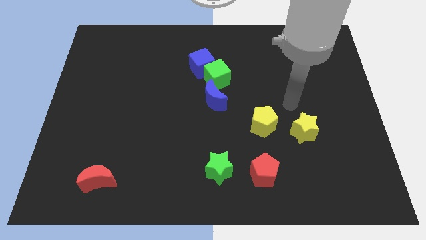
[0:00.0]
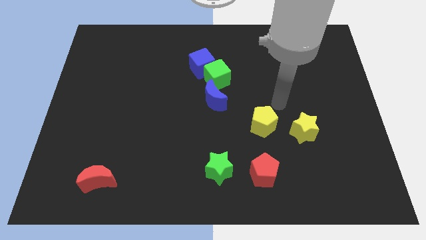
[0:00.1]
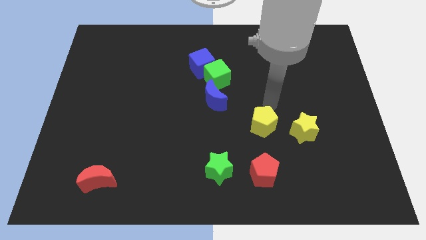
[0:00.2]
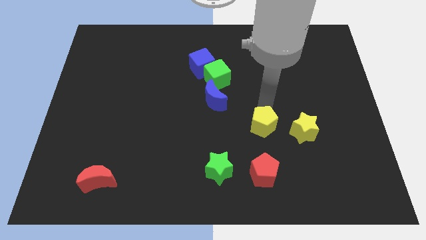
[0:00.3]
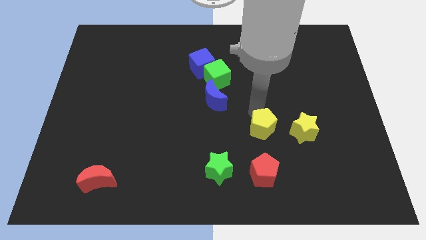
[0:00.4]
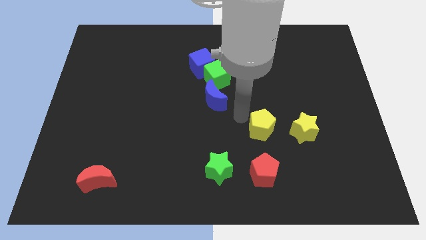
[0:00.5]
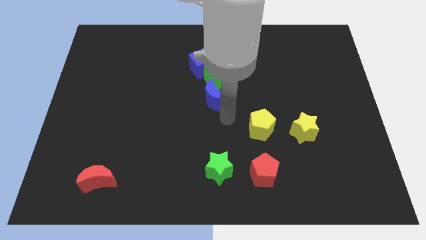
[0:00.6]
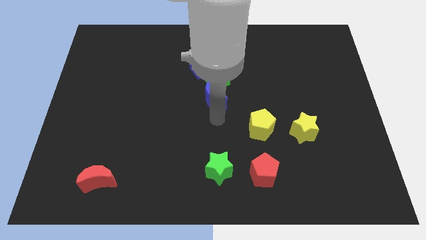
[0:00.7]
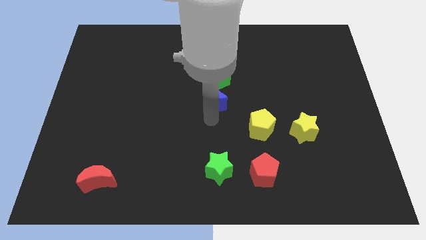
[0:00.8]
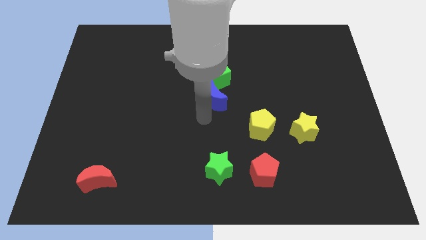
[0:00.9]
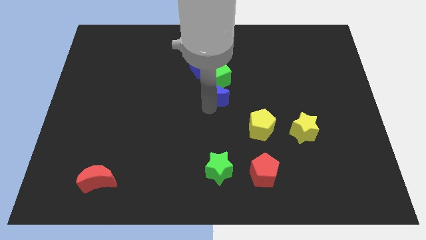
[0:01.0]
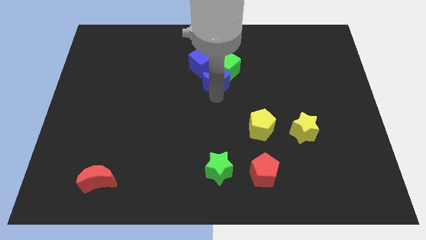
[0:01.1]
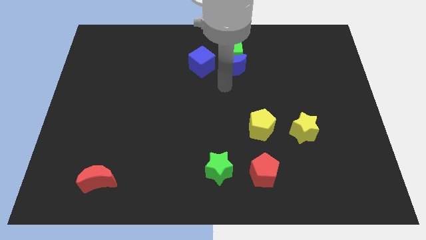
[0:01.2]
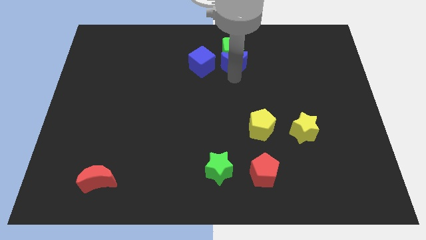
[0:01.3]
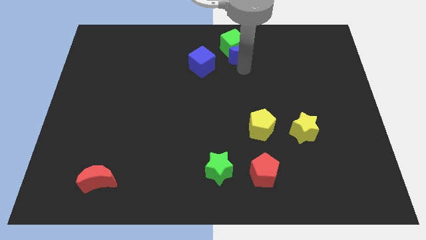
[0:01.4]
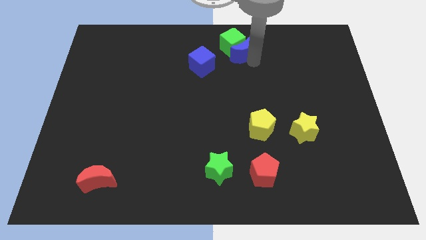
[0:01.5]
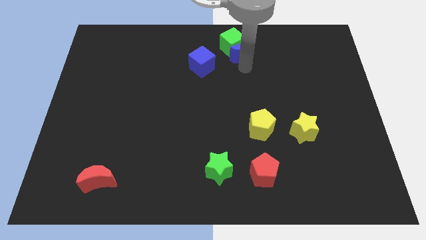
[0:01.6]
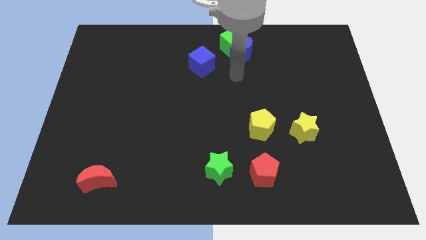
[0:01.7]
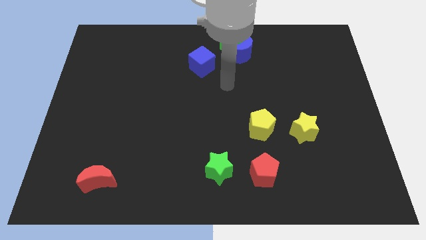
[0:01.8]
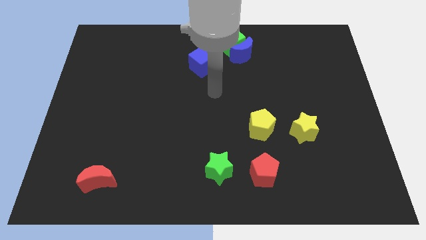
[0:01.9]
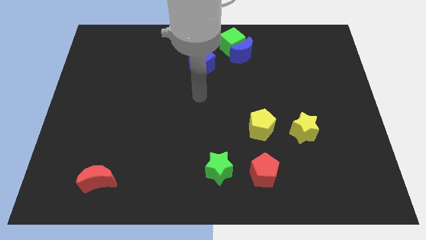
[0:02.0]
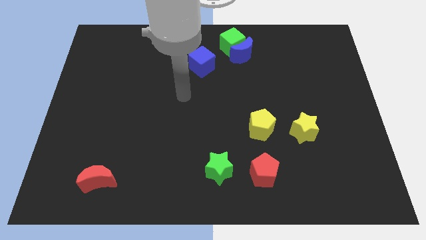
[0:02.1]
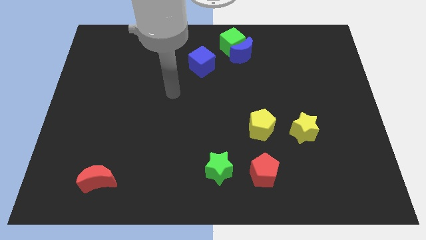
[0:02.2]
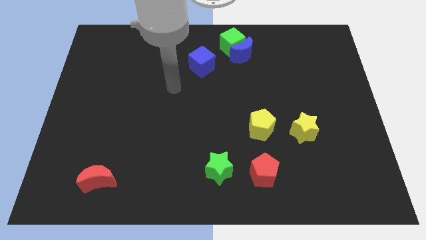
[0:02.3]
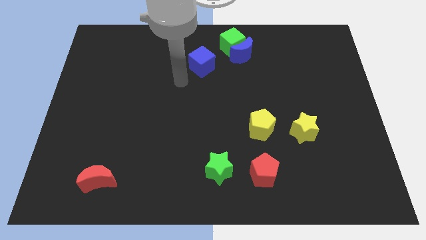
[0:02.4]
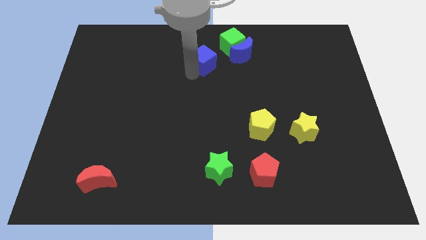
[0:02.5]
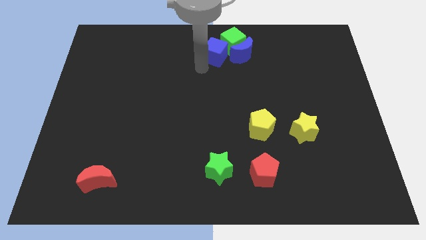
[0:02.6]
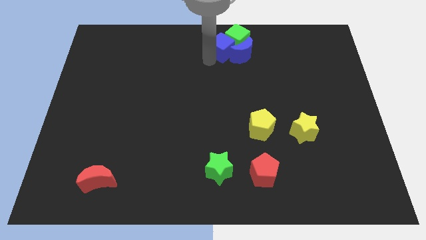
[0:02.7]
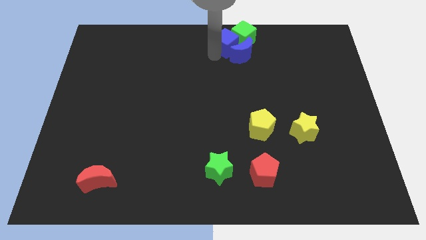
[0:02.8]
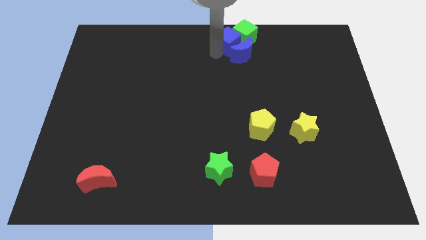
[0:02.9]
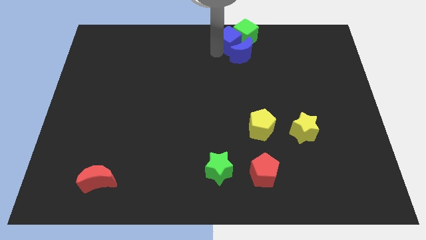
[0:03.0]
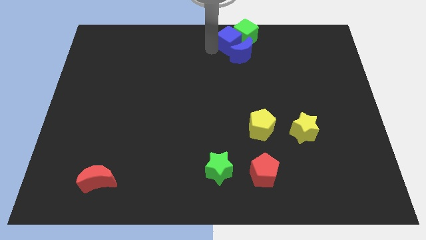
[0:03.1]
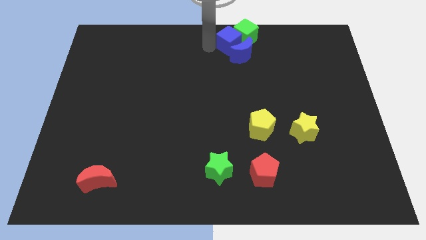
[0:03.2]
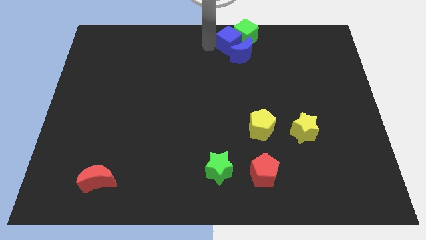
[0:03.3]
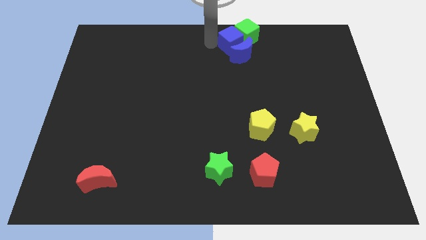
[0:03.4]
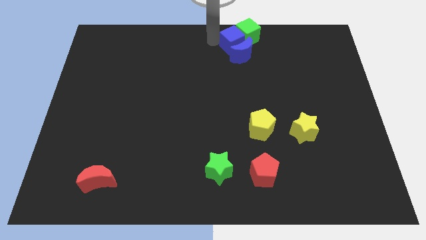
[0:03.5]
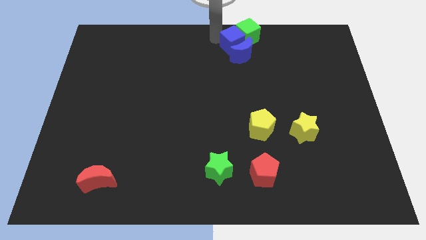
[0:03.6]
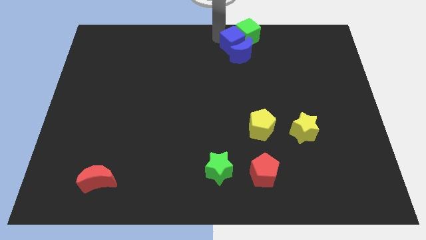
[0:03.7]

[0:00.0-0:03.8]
drag the blue moon along with the green cube towards up

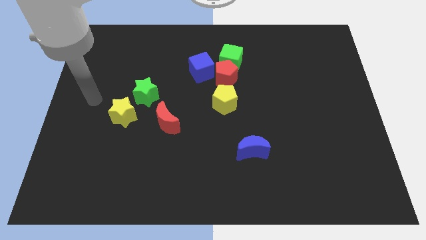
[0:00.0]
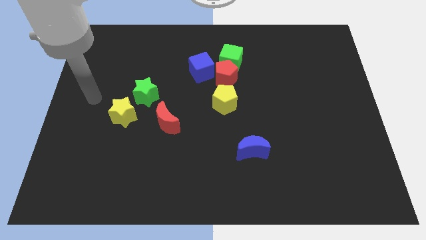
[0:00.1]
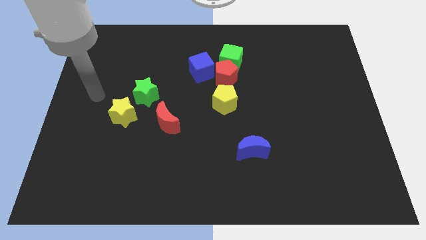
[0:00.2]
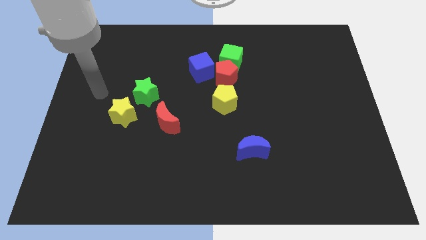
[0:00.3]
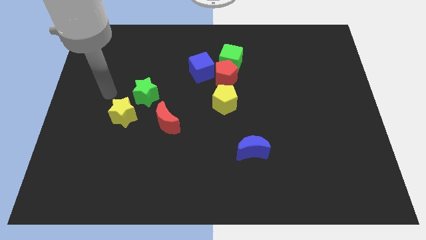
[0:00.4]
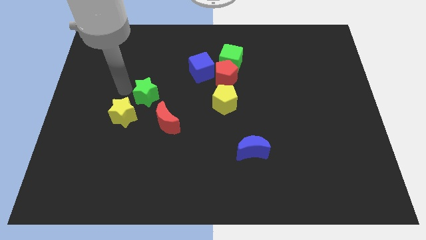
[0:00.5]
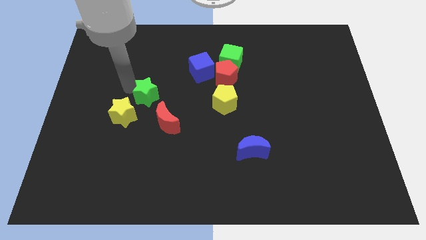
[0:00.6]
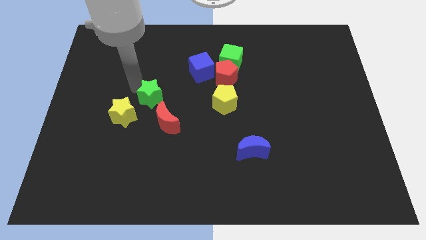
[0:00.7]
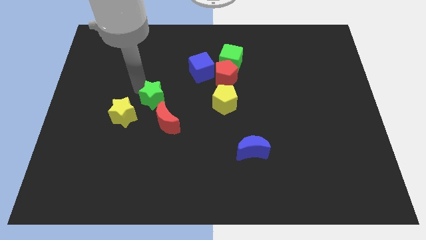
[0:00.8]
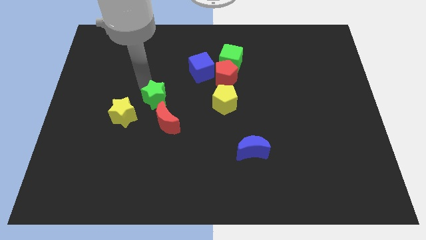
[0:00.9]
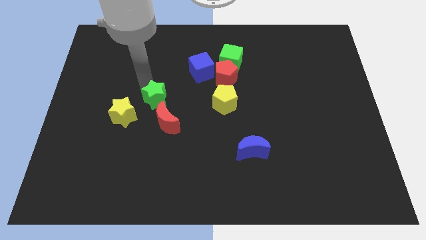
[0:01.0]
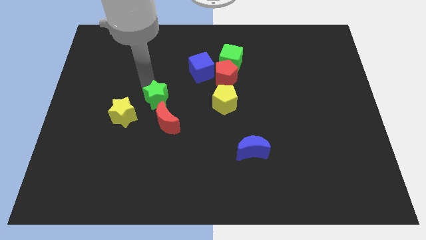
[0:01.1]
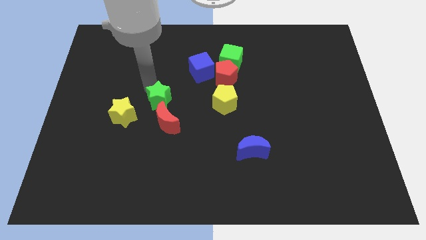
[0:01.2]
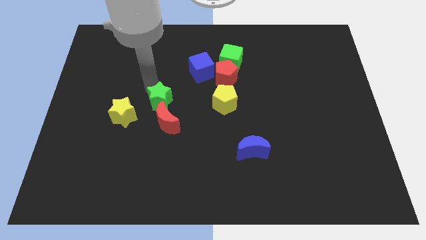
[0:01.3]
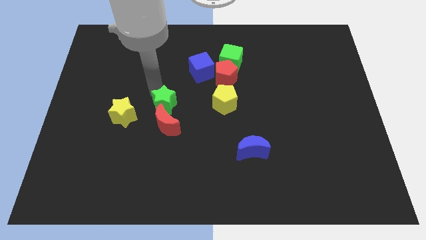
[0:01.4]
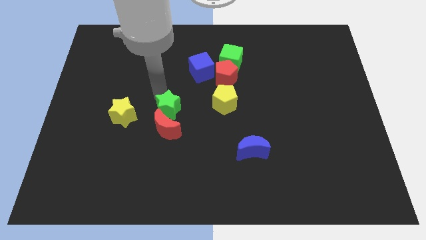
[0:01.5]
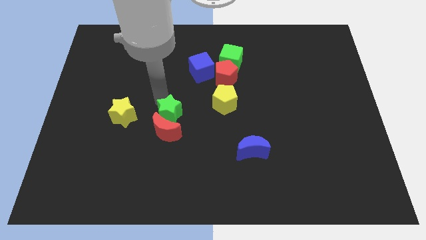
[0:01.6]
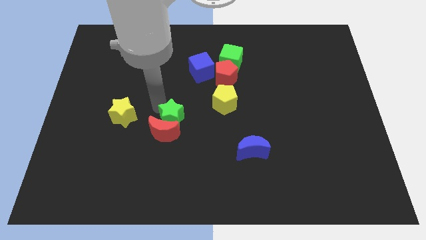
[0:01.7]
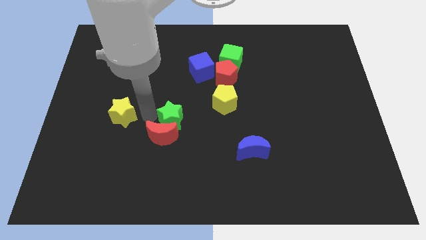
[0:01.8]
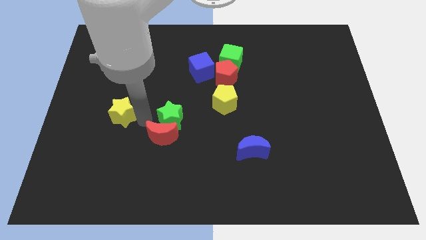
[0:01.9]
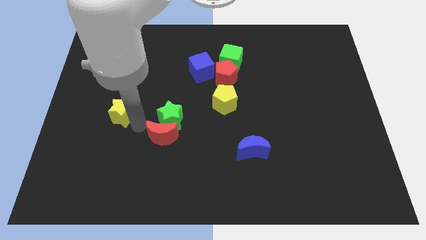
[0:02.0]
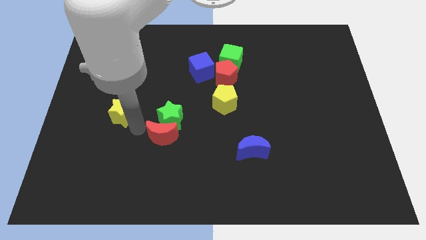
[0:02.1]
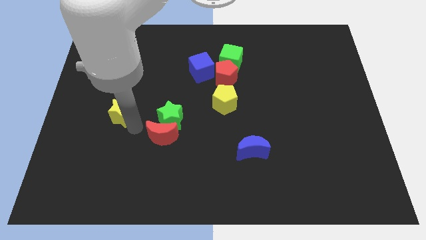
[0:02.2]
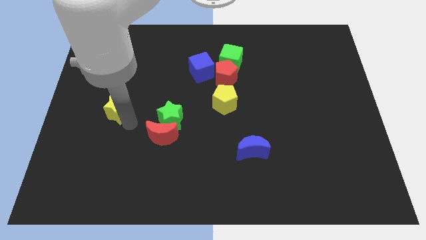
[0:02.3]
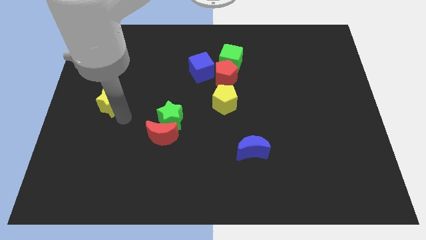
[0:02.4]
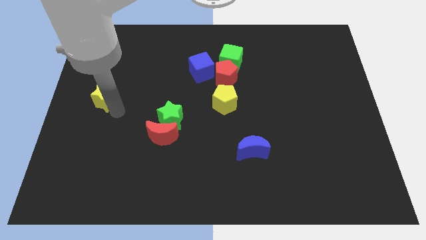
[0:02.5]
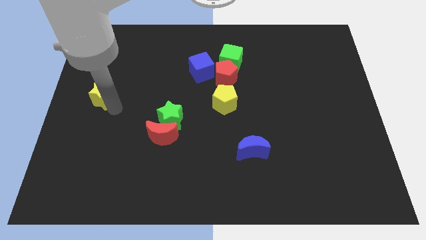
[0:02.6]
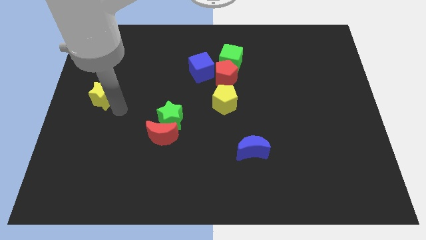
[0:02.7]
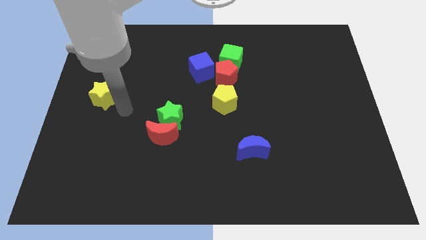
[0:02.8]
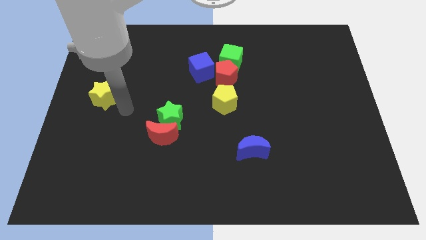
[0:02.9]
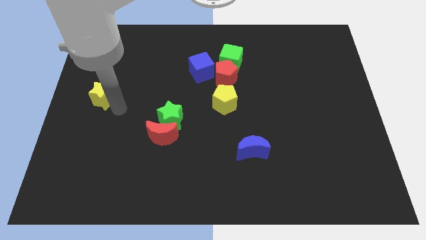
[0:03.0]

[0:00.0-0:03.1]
separate green star and yellow star form each other

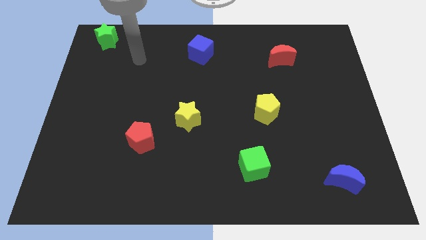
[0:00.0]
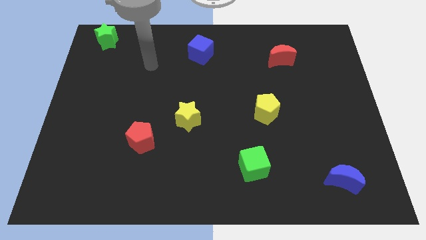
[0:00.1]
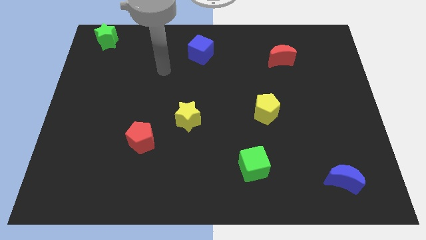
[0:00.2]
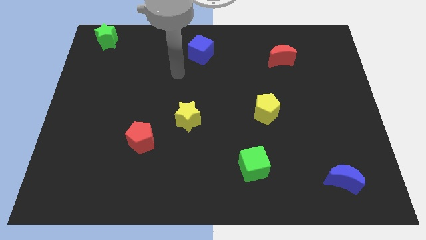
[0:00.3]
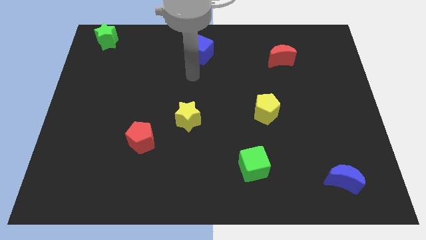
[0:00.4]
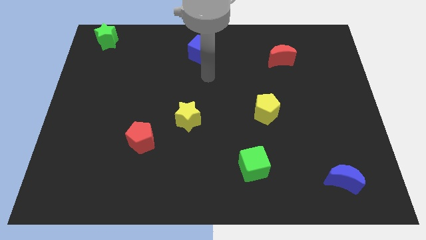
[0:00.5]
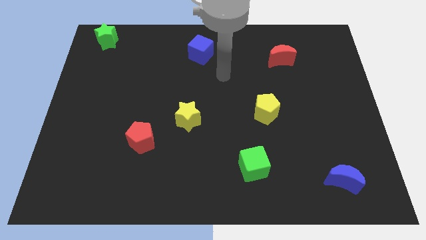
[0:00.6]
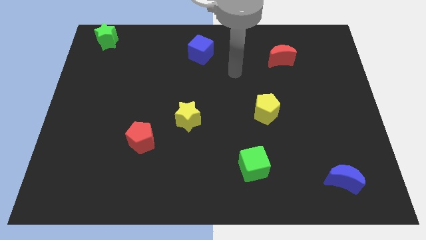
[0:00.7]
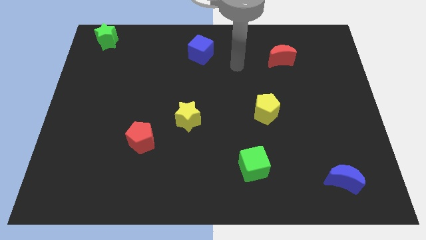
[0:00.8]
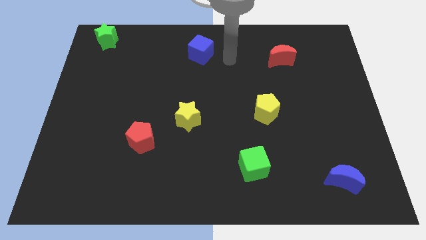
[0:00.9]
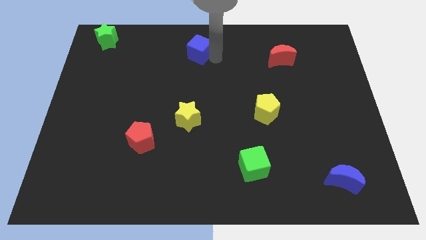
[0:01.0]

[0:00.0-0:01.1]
place your arm right to blue cube

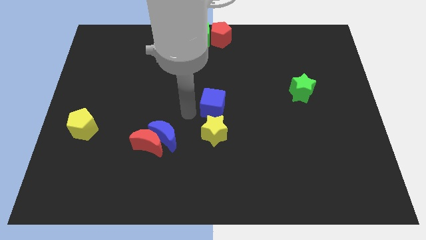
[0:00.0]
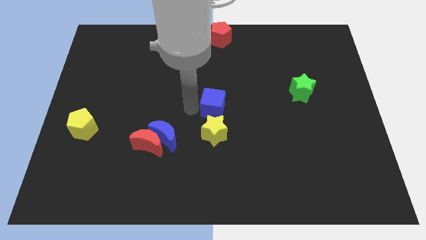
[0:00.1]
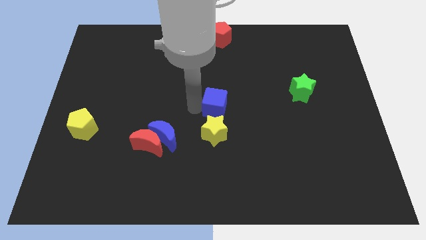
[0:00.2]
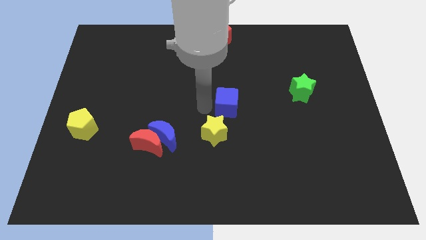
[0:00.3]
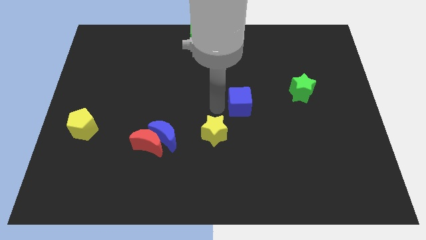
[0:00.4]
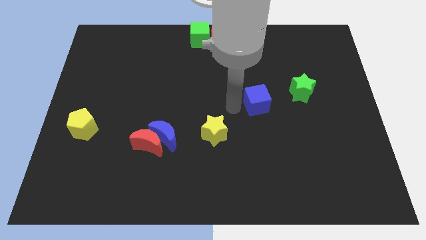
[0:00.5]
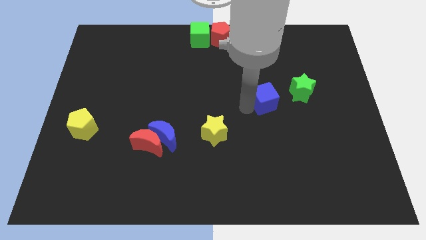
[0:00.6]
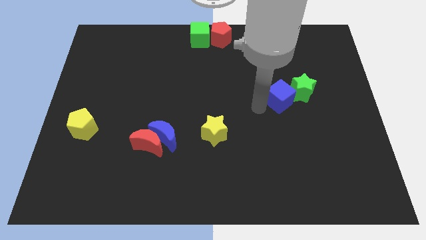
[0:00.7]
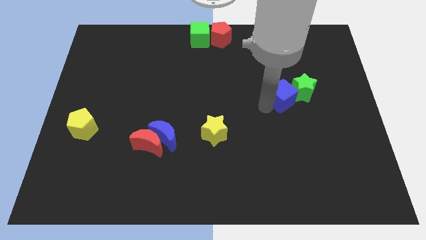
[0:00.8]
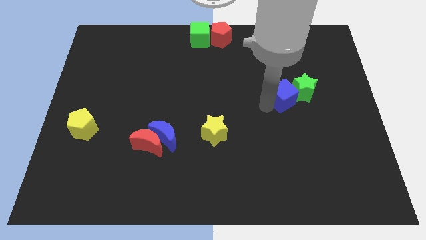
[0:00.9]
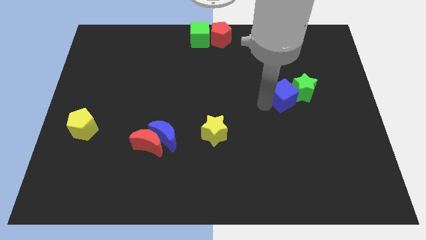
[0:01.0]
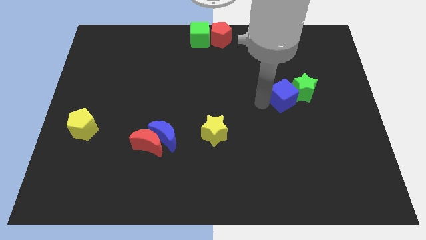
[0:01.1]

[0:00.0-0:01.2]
move blue cube into the green star
